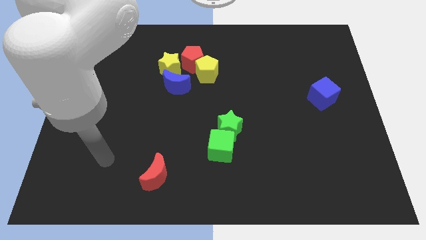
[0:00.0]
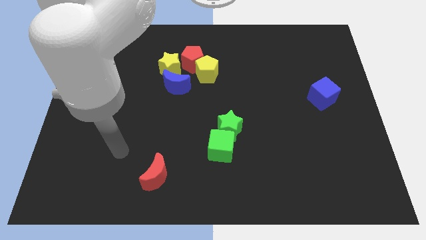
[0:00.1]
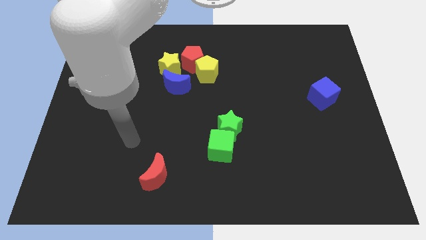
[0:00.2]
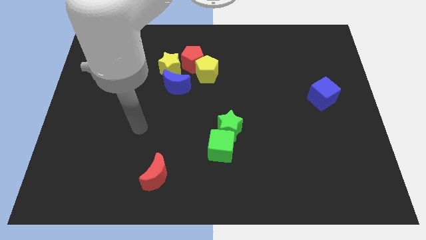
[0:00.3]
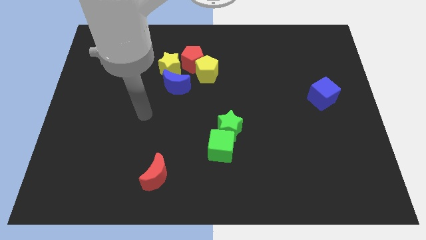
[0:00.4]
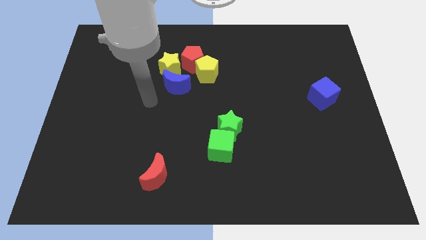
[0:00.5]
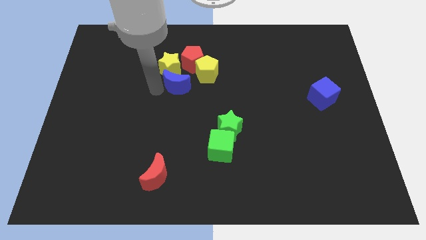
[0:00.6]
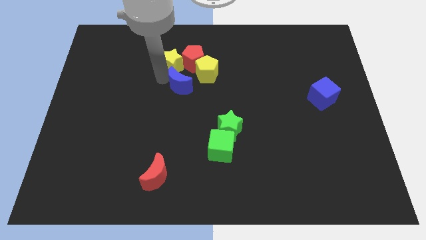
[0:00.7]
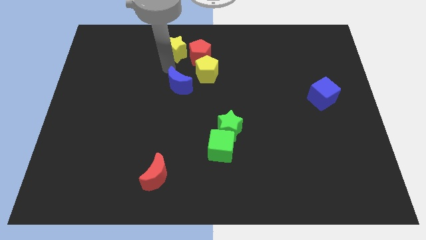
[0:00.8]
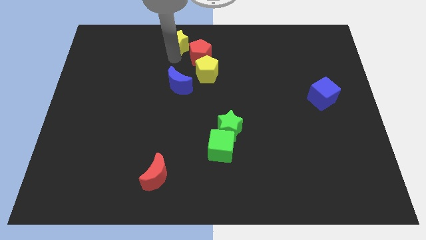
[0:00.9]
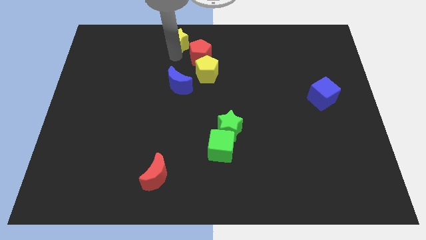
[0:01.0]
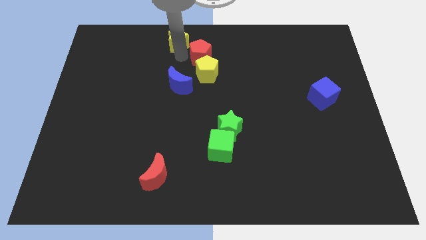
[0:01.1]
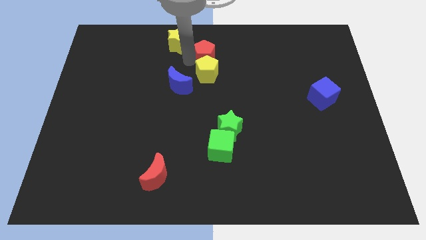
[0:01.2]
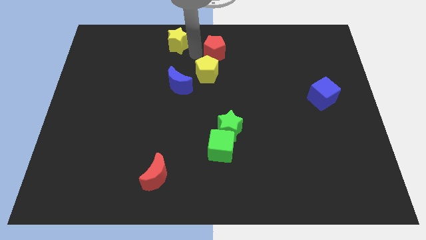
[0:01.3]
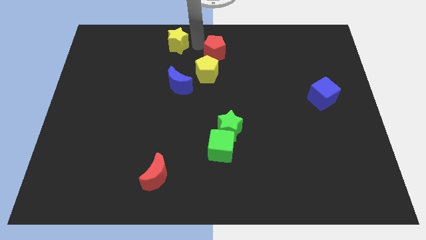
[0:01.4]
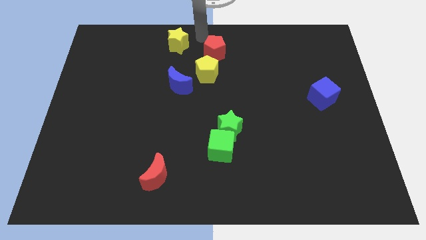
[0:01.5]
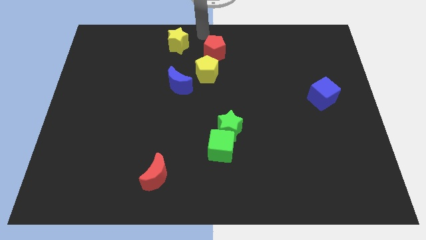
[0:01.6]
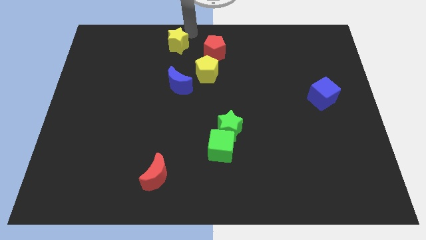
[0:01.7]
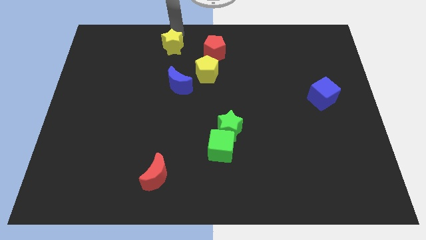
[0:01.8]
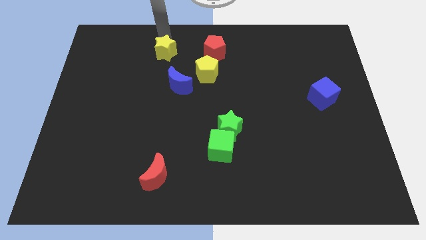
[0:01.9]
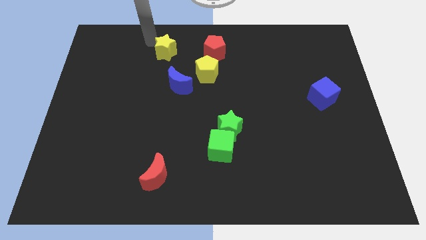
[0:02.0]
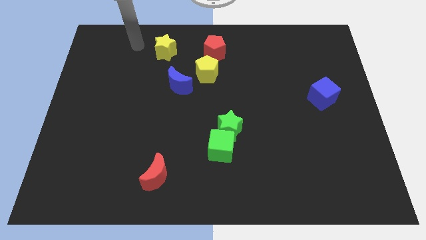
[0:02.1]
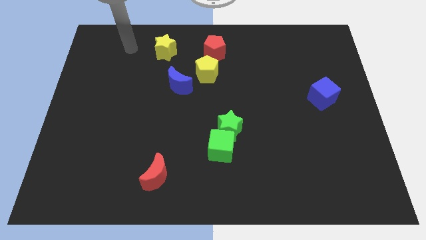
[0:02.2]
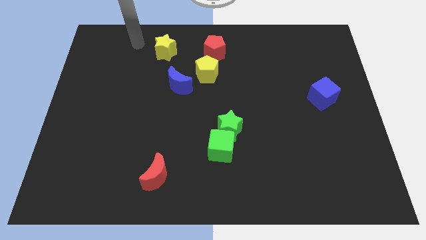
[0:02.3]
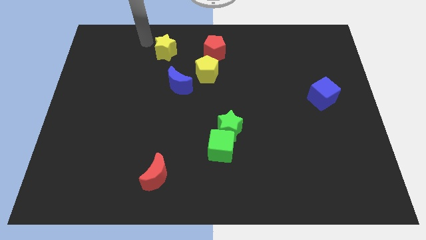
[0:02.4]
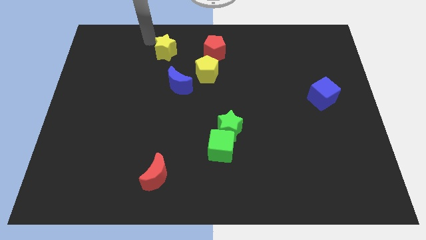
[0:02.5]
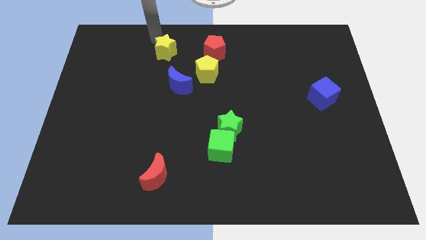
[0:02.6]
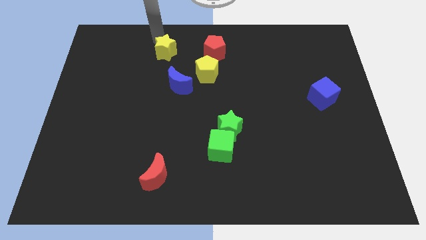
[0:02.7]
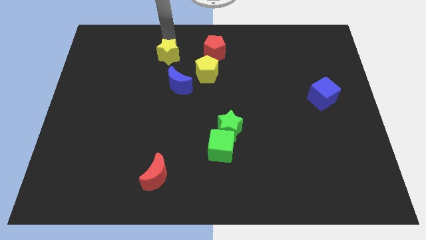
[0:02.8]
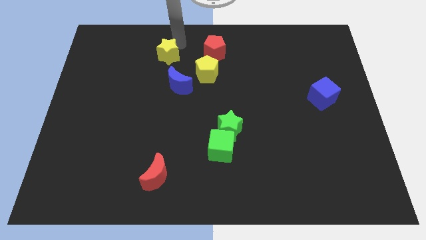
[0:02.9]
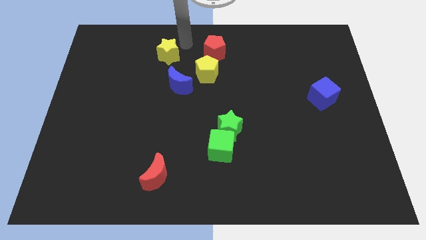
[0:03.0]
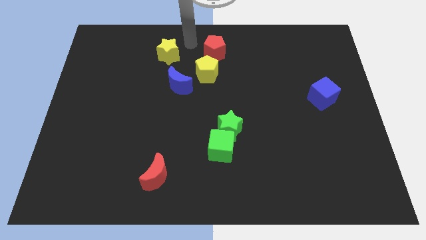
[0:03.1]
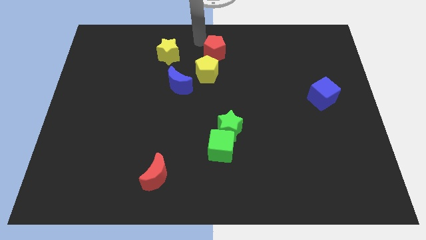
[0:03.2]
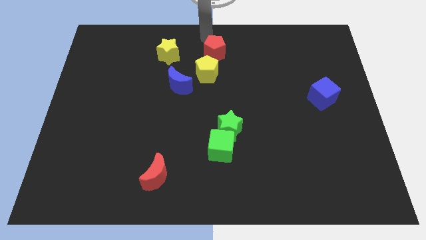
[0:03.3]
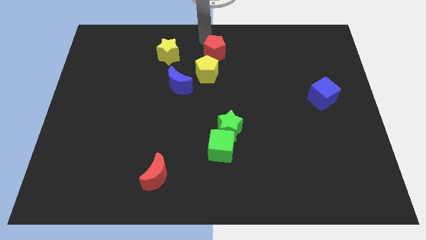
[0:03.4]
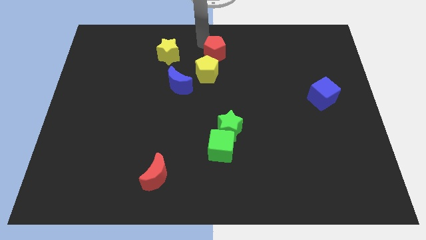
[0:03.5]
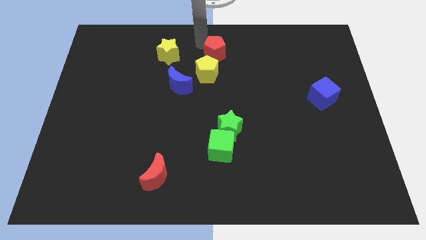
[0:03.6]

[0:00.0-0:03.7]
separate yellow star from the red pentagon

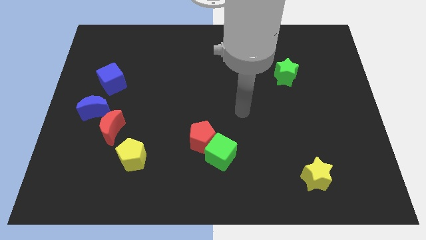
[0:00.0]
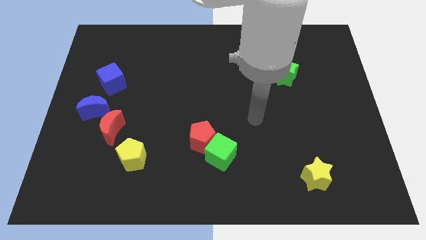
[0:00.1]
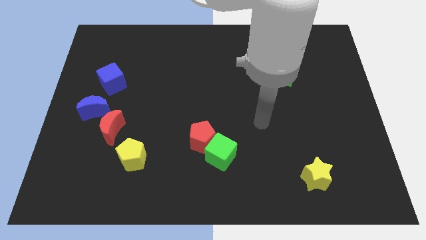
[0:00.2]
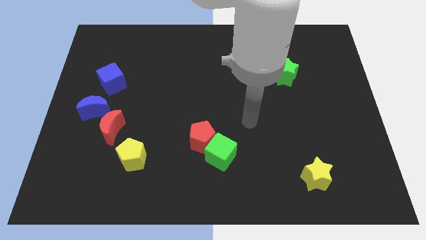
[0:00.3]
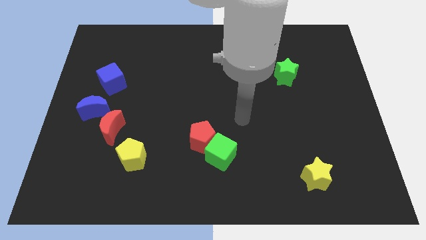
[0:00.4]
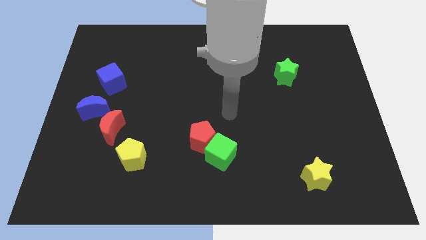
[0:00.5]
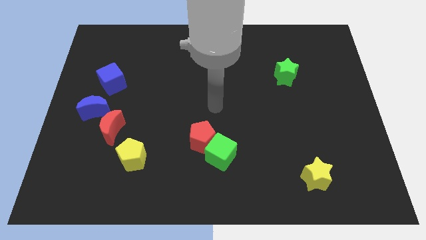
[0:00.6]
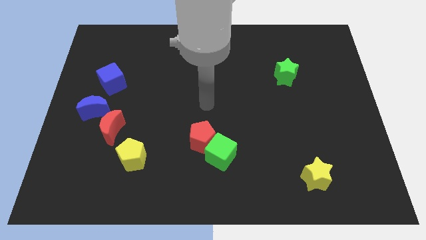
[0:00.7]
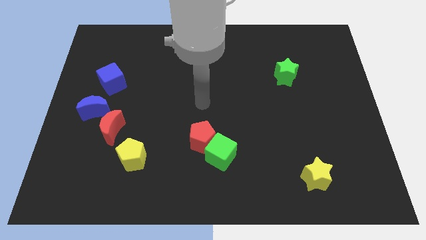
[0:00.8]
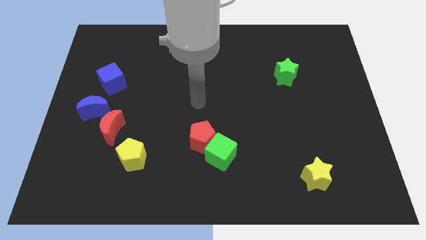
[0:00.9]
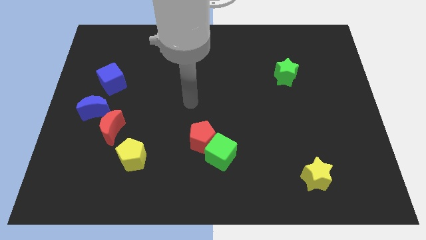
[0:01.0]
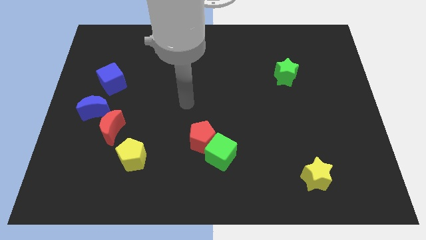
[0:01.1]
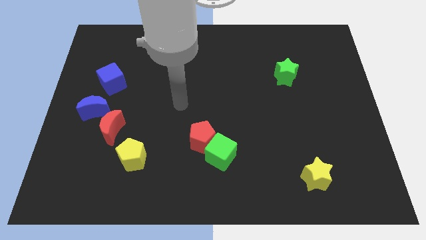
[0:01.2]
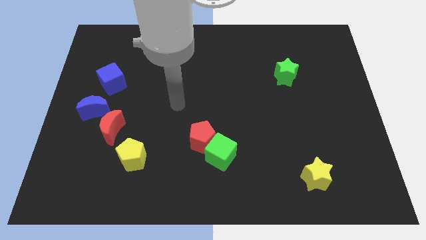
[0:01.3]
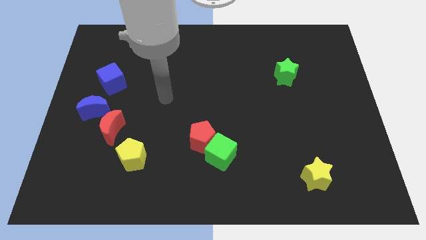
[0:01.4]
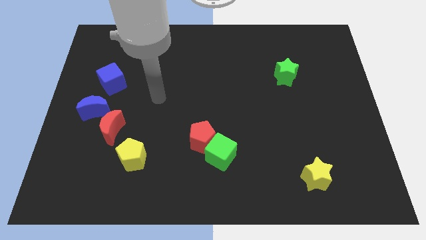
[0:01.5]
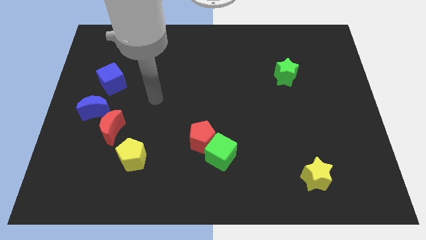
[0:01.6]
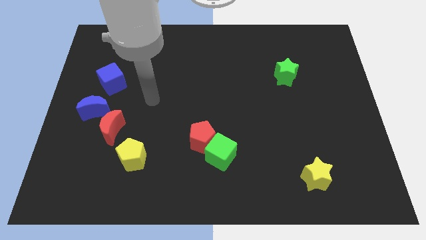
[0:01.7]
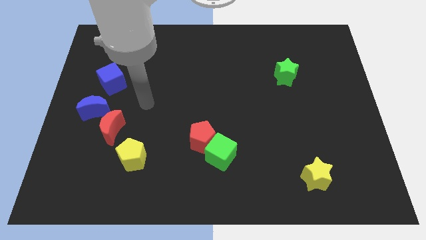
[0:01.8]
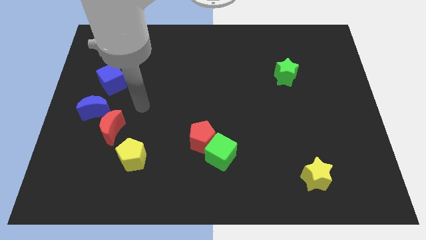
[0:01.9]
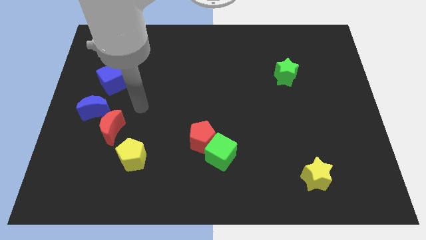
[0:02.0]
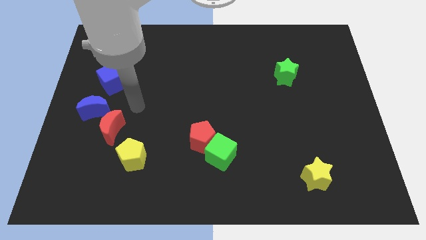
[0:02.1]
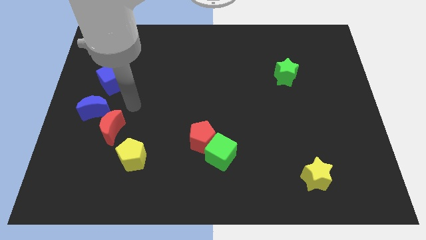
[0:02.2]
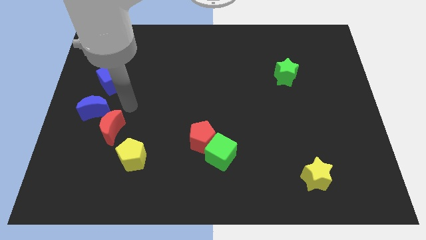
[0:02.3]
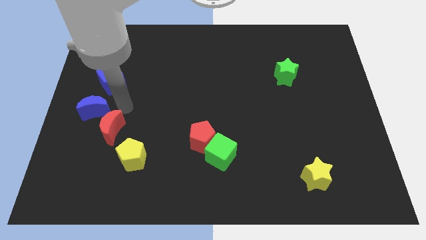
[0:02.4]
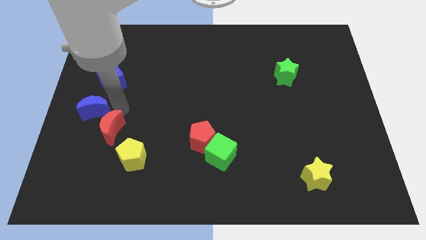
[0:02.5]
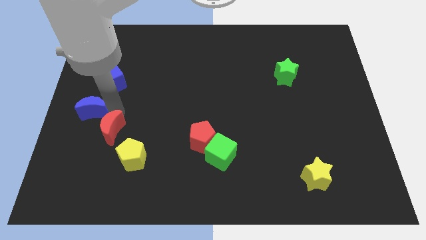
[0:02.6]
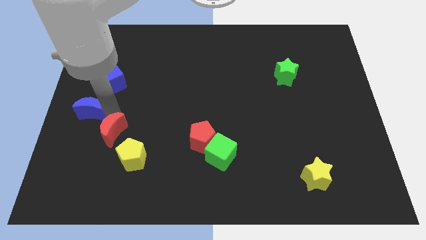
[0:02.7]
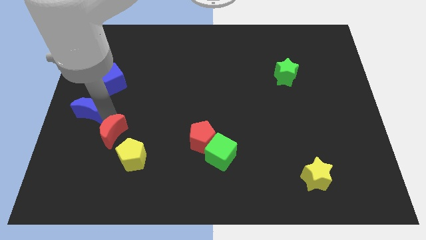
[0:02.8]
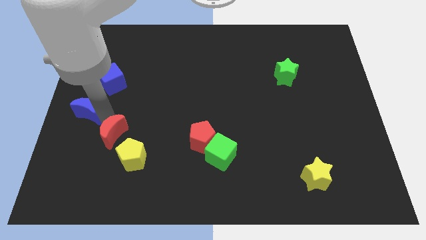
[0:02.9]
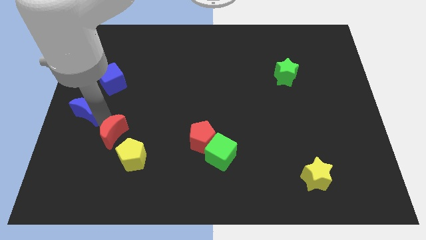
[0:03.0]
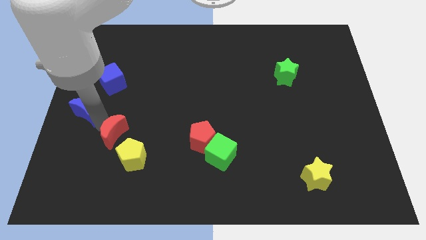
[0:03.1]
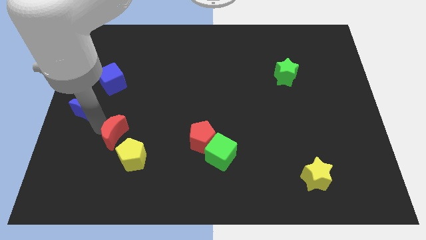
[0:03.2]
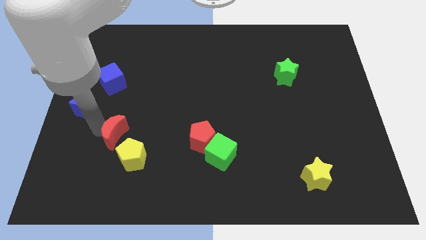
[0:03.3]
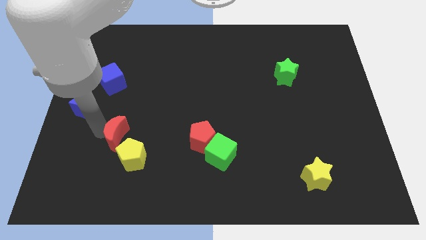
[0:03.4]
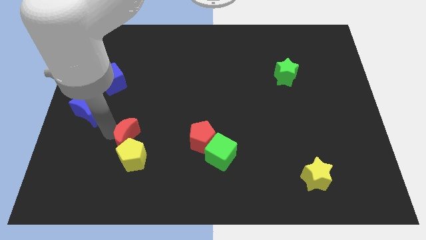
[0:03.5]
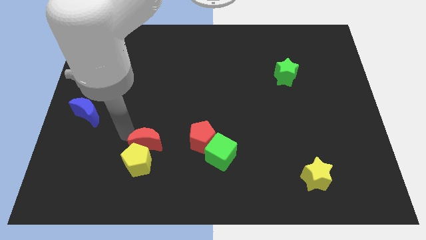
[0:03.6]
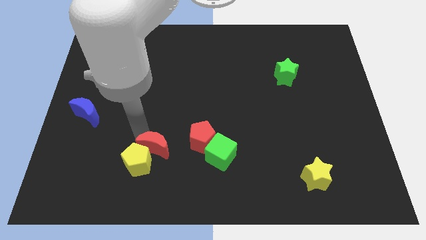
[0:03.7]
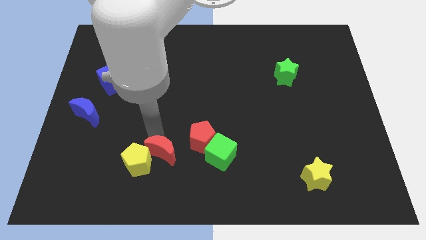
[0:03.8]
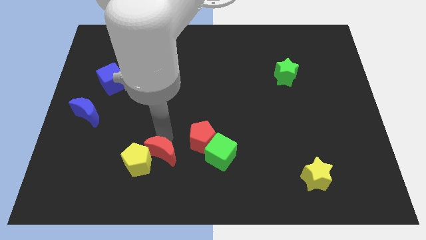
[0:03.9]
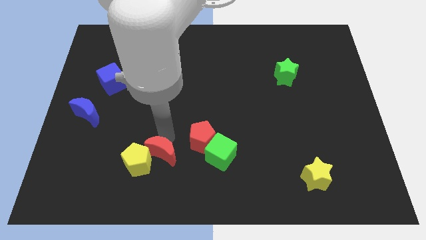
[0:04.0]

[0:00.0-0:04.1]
separate the blue moon and red moon

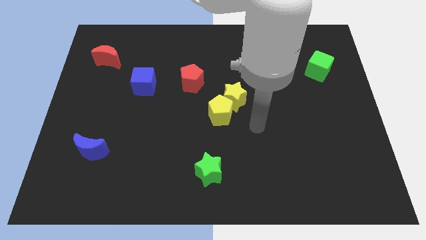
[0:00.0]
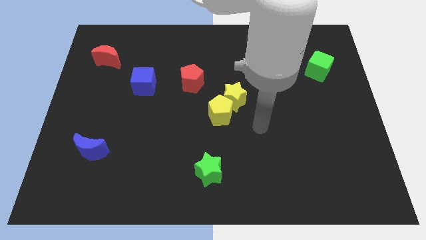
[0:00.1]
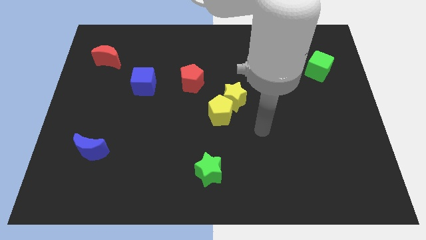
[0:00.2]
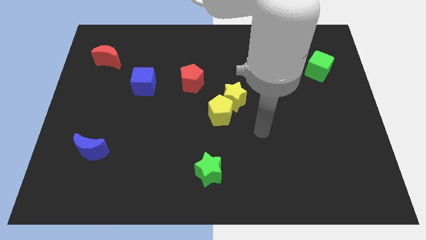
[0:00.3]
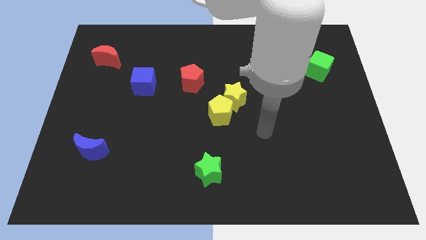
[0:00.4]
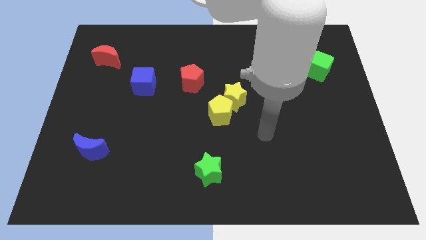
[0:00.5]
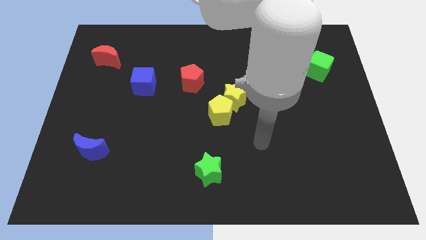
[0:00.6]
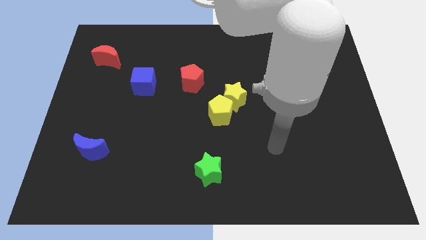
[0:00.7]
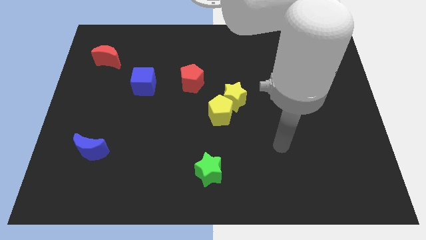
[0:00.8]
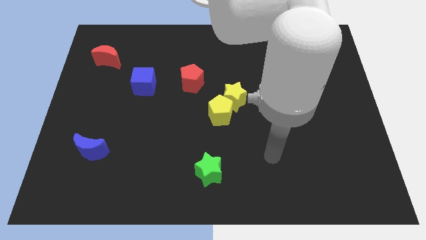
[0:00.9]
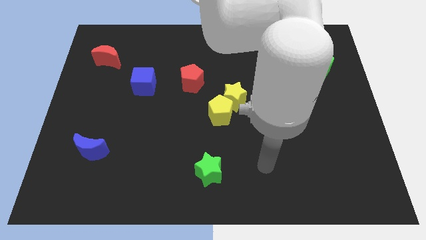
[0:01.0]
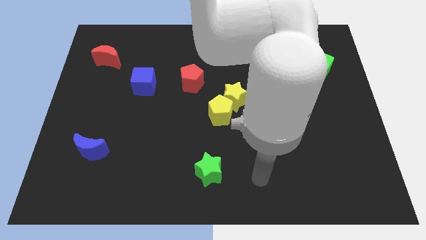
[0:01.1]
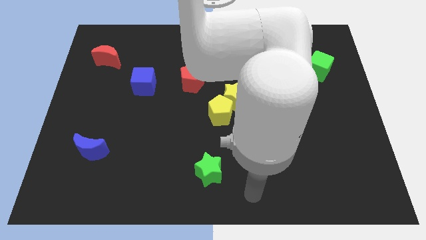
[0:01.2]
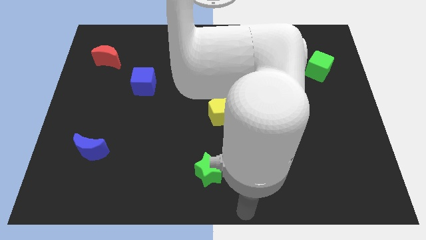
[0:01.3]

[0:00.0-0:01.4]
push arm in the bottom center
